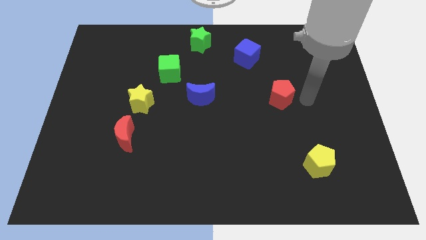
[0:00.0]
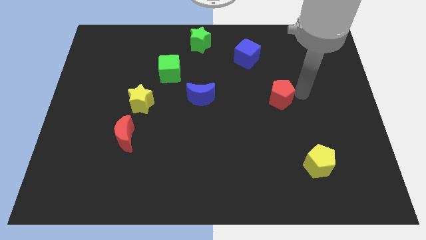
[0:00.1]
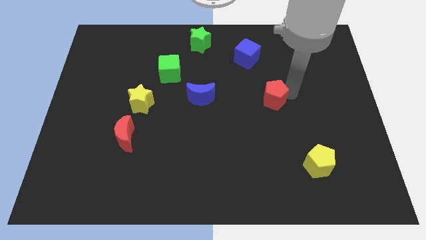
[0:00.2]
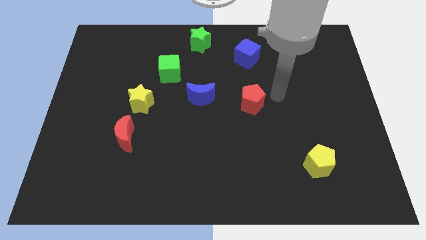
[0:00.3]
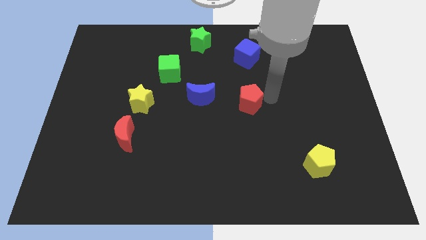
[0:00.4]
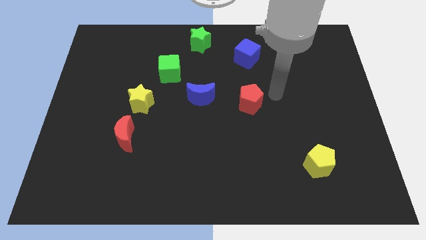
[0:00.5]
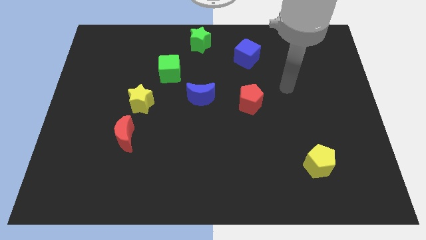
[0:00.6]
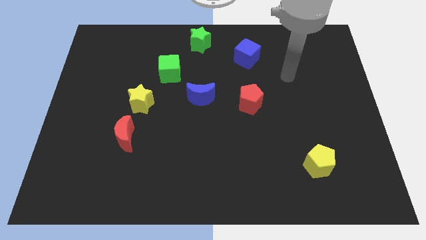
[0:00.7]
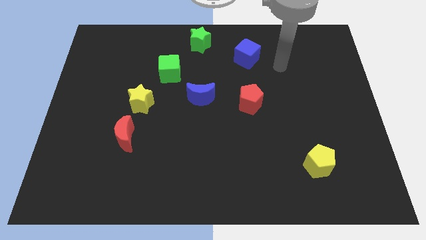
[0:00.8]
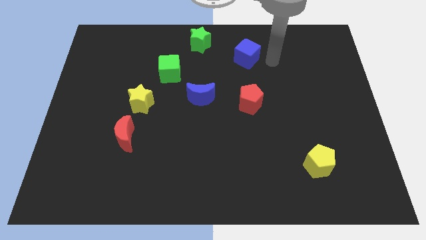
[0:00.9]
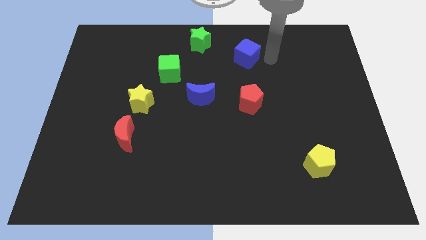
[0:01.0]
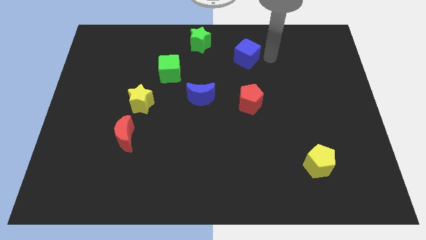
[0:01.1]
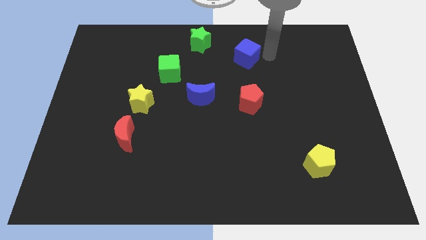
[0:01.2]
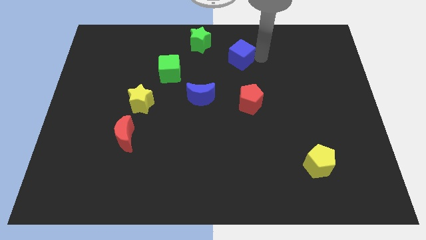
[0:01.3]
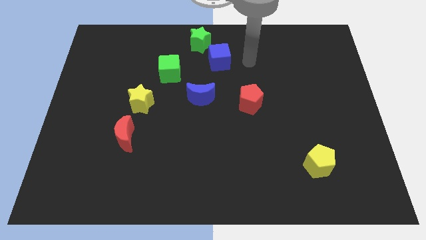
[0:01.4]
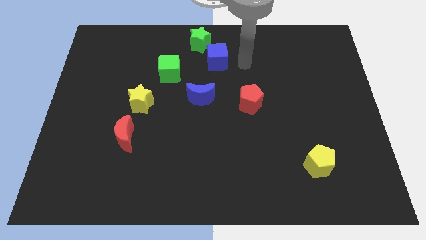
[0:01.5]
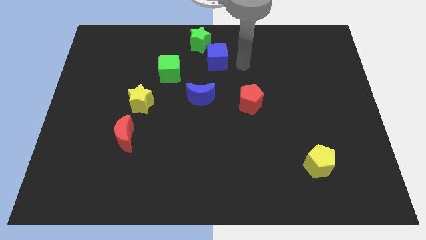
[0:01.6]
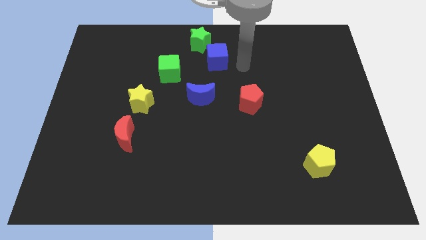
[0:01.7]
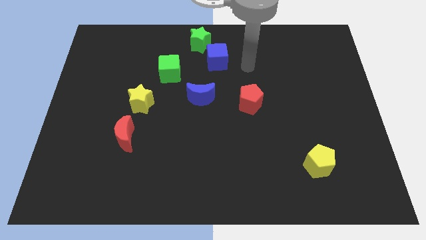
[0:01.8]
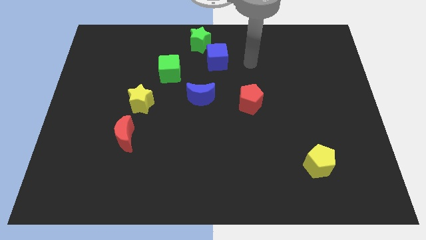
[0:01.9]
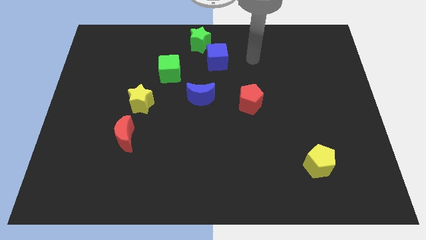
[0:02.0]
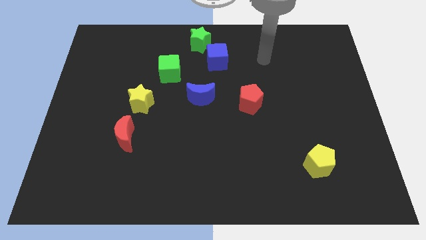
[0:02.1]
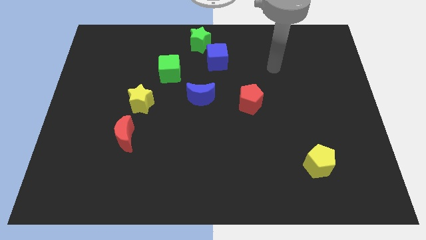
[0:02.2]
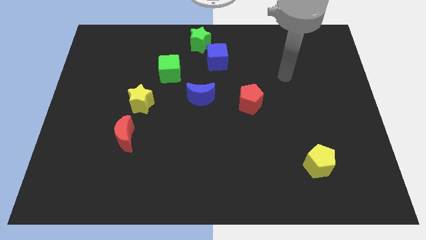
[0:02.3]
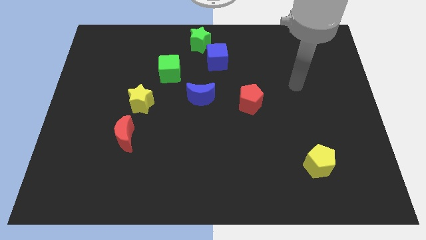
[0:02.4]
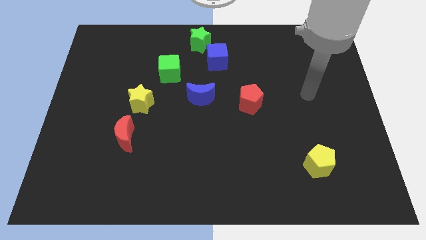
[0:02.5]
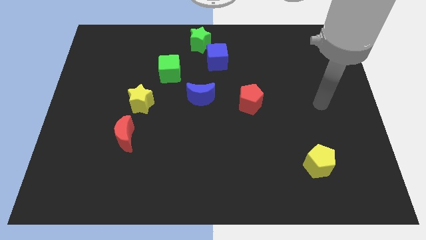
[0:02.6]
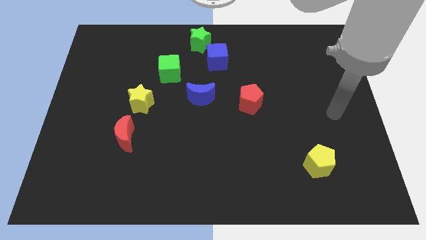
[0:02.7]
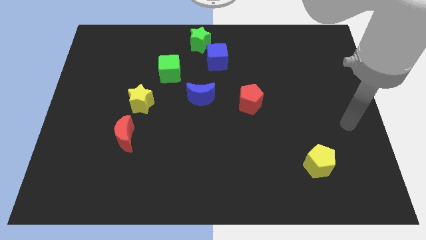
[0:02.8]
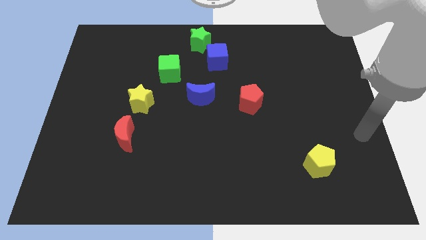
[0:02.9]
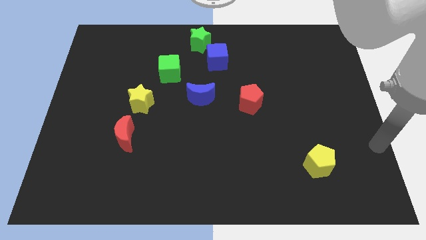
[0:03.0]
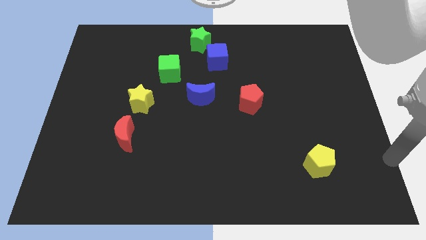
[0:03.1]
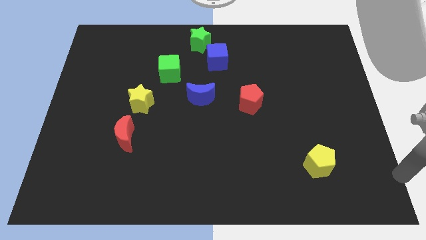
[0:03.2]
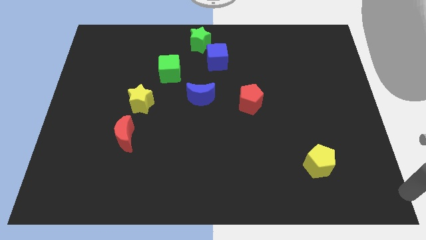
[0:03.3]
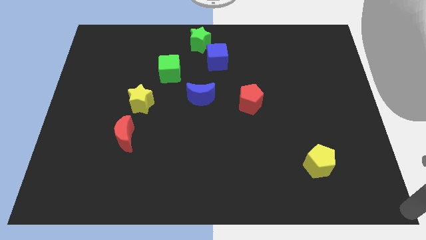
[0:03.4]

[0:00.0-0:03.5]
move your arm to the bottom center of the board

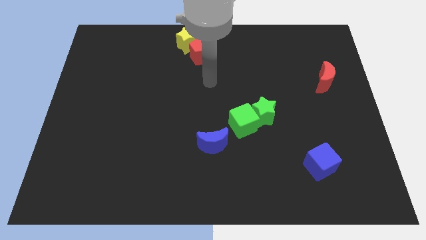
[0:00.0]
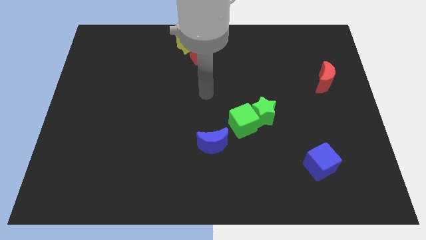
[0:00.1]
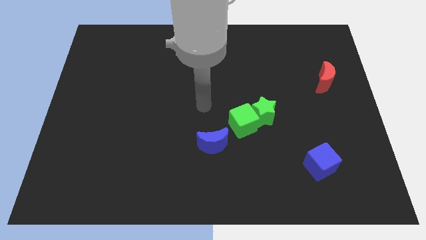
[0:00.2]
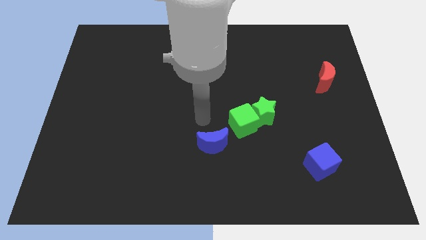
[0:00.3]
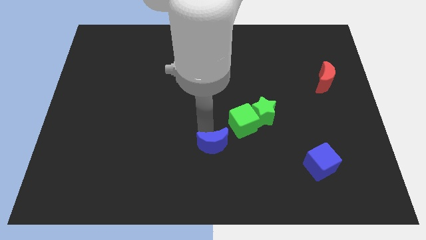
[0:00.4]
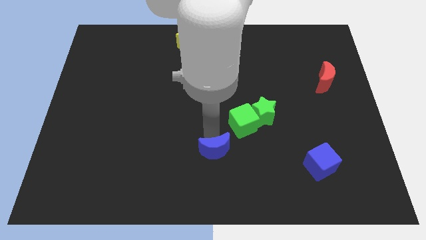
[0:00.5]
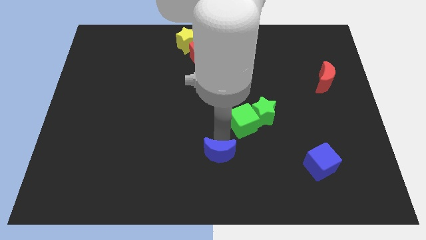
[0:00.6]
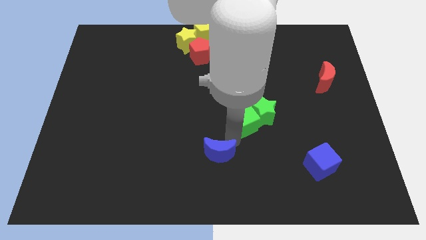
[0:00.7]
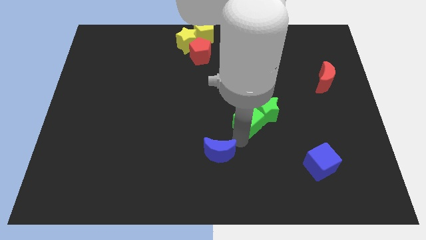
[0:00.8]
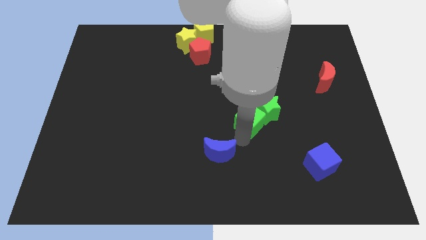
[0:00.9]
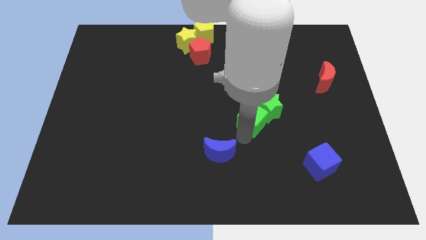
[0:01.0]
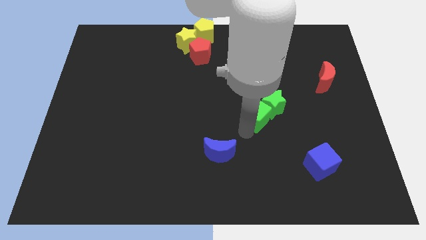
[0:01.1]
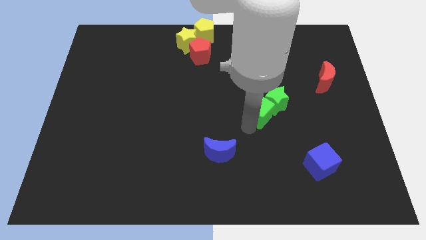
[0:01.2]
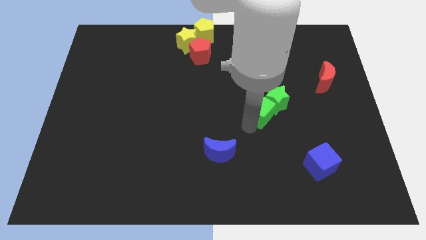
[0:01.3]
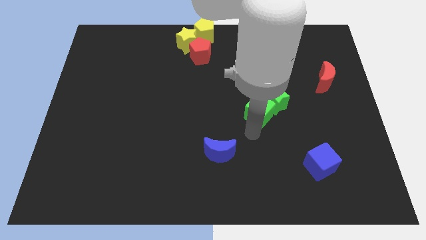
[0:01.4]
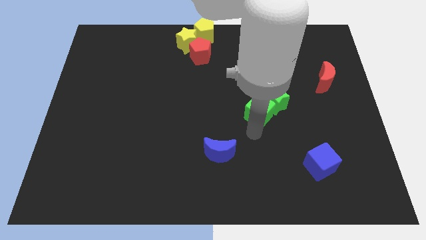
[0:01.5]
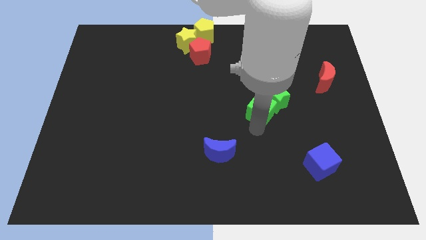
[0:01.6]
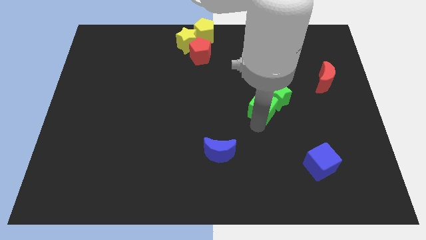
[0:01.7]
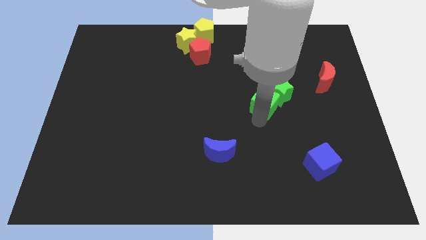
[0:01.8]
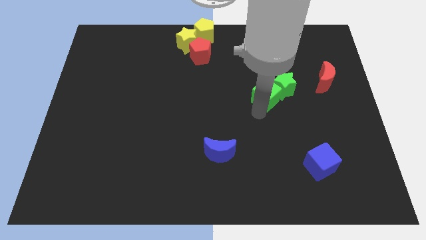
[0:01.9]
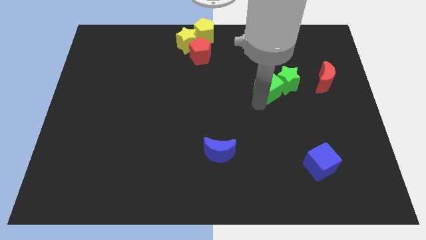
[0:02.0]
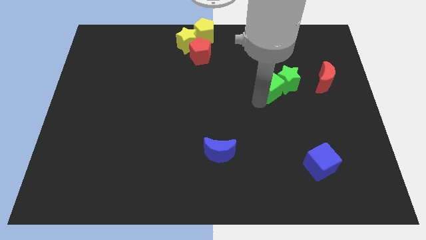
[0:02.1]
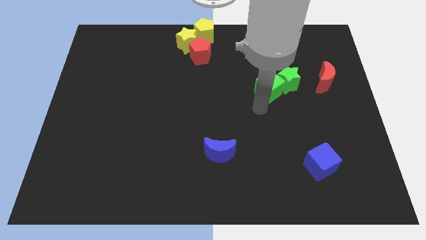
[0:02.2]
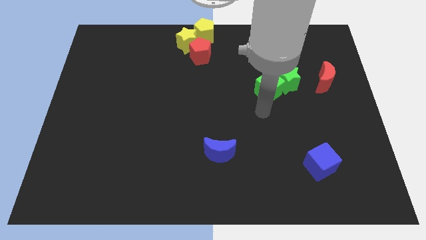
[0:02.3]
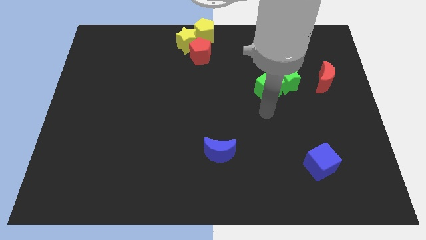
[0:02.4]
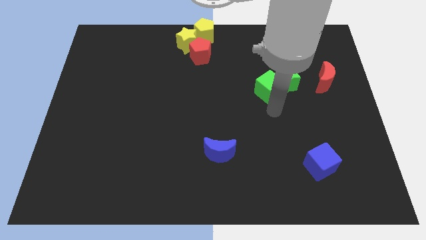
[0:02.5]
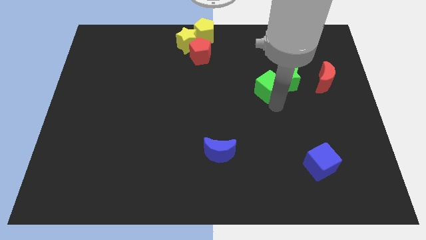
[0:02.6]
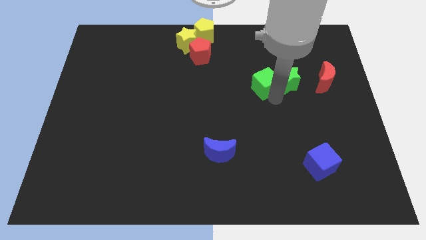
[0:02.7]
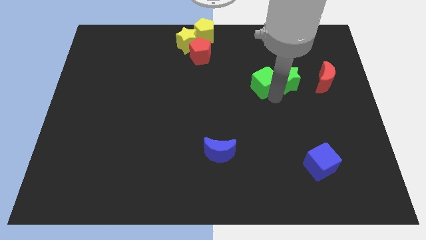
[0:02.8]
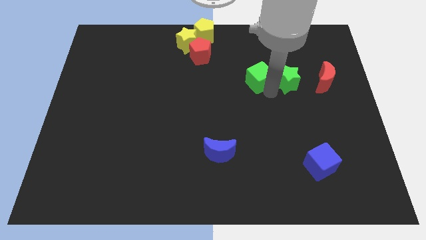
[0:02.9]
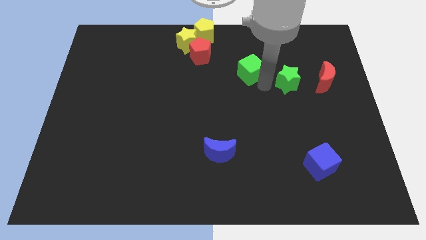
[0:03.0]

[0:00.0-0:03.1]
separate green blocks from blue crescent

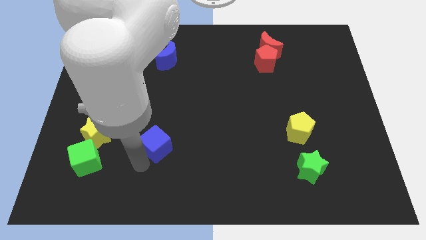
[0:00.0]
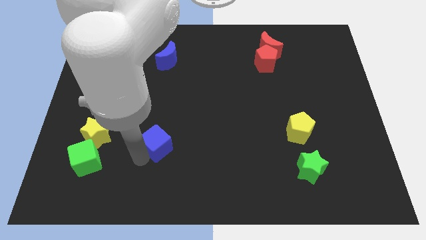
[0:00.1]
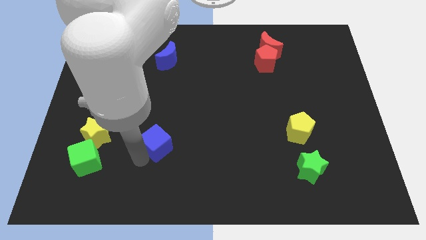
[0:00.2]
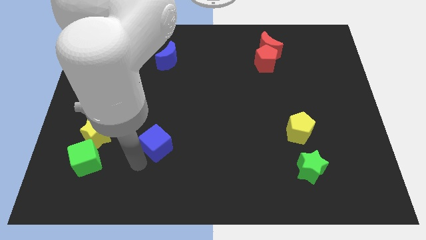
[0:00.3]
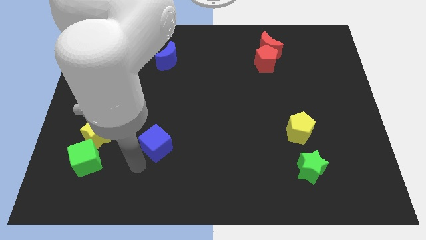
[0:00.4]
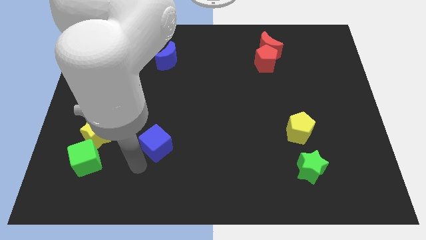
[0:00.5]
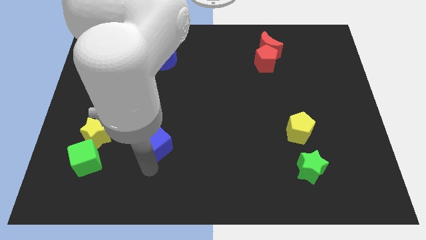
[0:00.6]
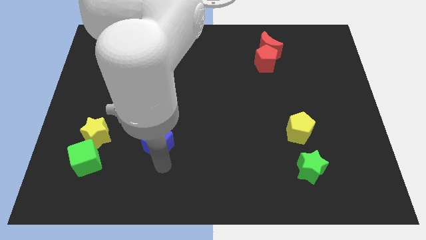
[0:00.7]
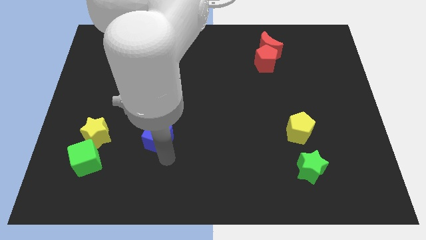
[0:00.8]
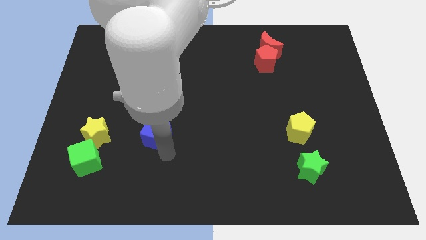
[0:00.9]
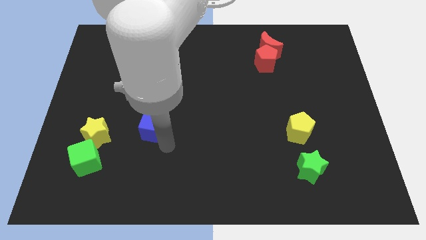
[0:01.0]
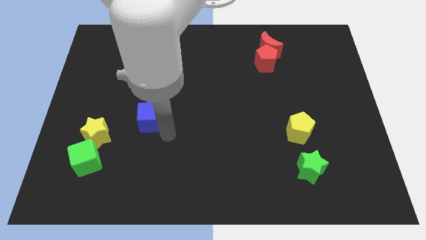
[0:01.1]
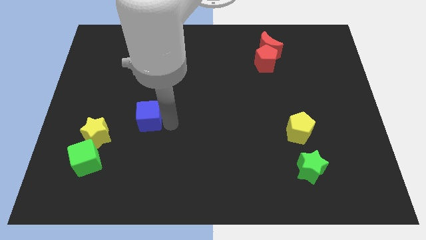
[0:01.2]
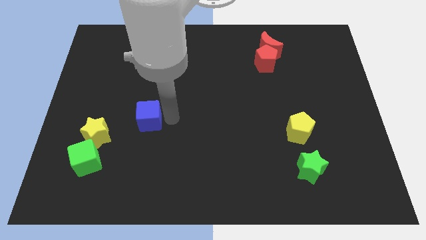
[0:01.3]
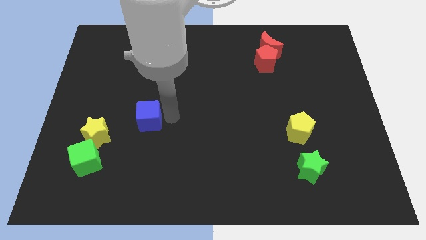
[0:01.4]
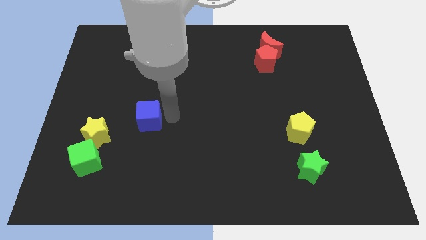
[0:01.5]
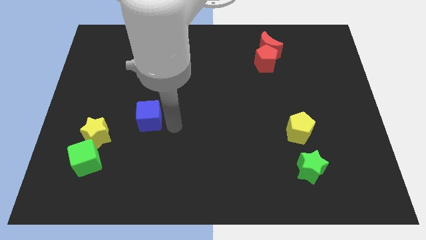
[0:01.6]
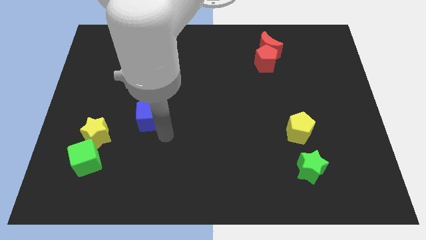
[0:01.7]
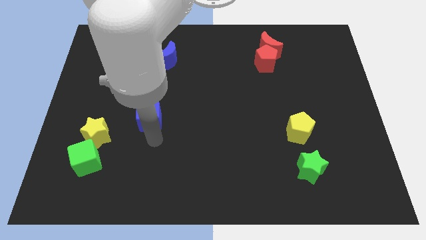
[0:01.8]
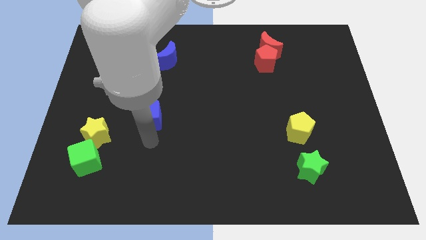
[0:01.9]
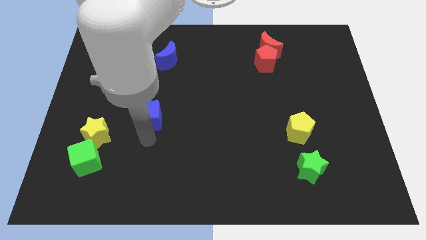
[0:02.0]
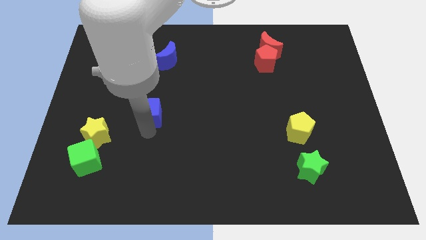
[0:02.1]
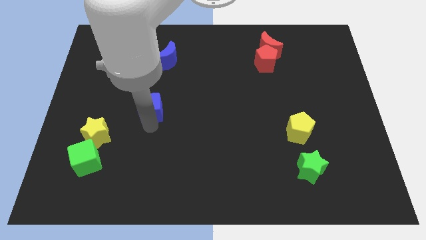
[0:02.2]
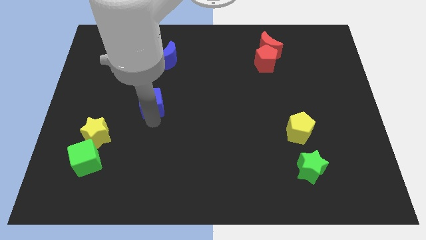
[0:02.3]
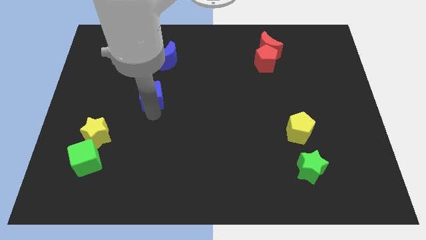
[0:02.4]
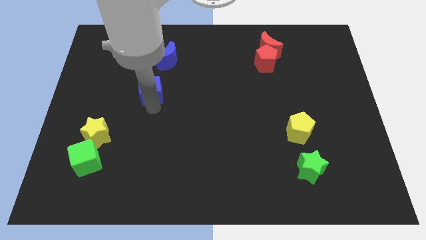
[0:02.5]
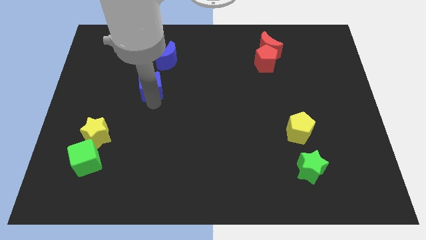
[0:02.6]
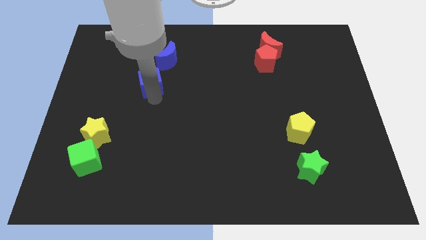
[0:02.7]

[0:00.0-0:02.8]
move blue cube towards blue moon
